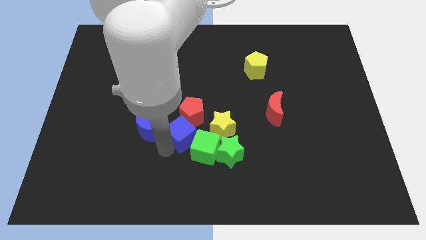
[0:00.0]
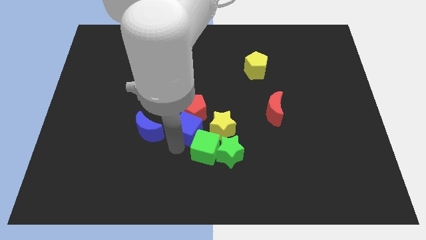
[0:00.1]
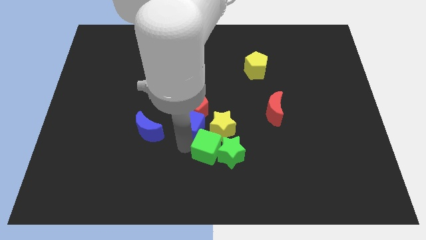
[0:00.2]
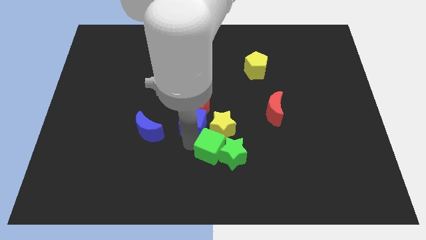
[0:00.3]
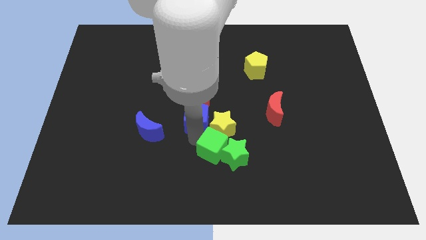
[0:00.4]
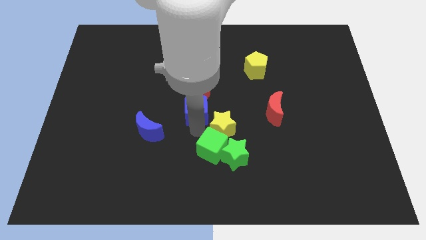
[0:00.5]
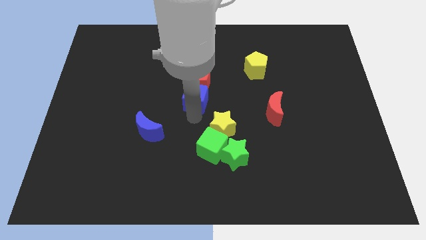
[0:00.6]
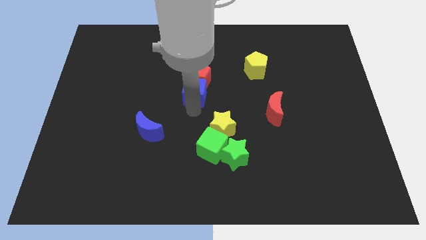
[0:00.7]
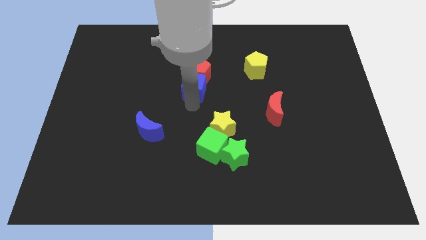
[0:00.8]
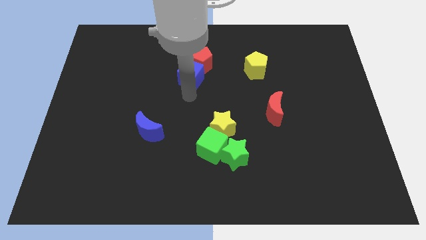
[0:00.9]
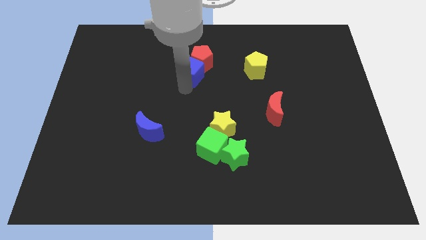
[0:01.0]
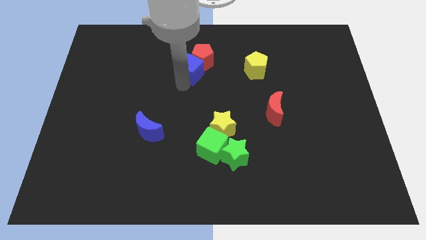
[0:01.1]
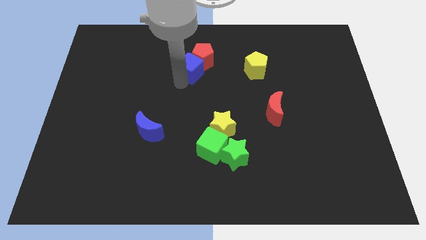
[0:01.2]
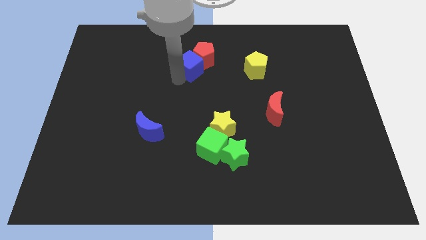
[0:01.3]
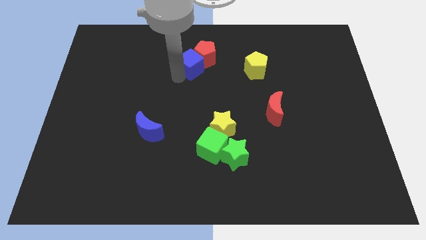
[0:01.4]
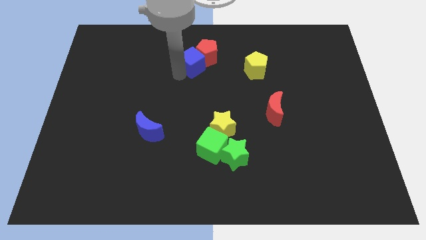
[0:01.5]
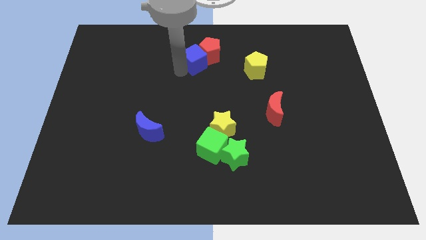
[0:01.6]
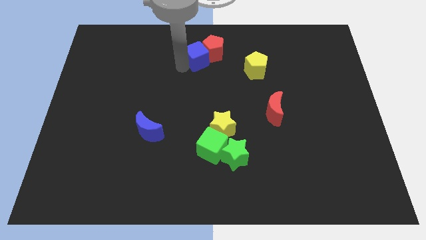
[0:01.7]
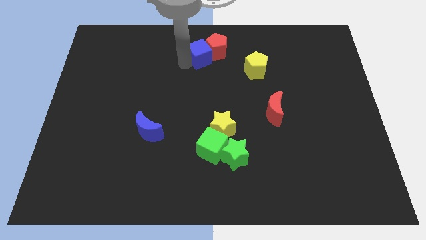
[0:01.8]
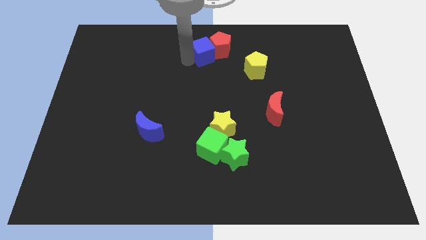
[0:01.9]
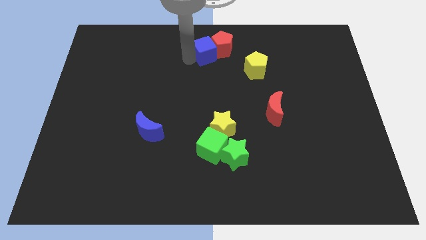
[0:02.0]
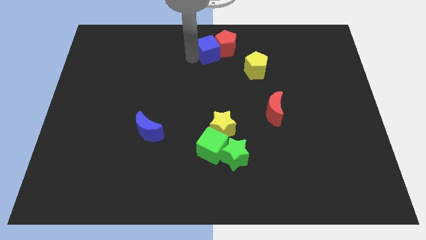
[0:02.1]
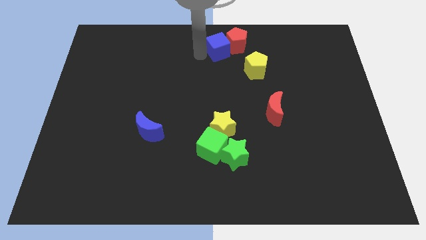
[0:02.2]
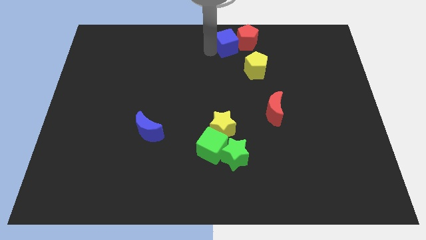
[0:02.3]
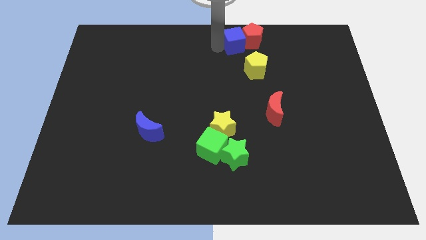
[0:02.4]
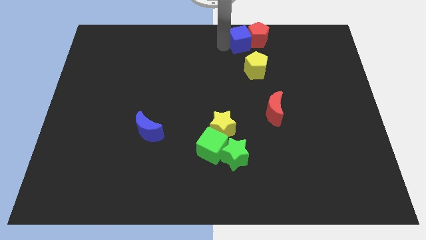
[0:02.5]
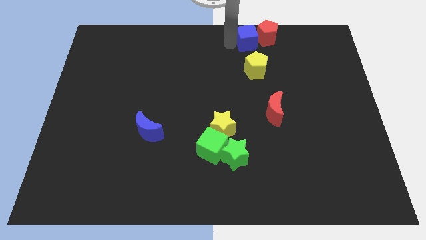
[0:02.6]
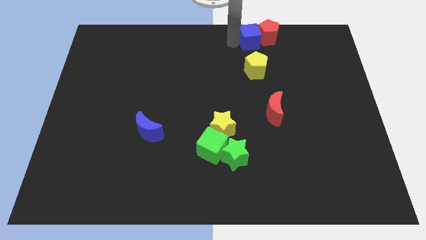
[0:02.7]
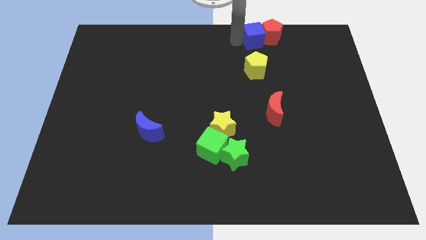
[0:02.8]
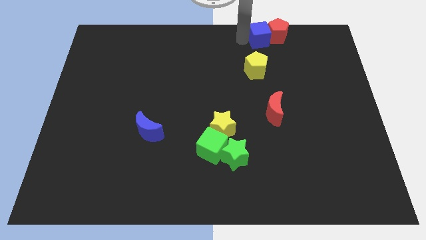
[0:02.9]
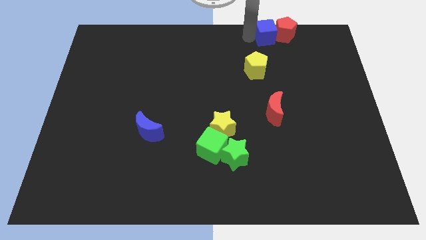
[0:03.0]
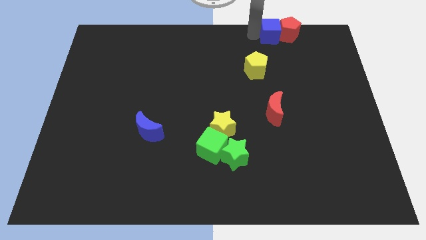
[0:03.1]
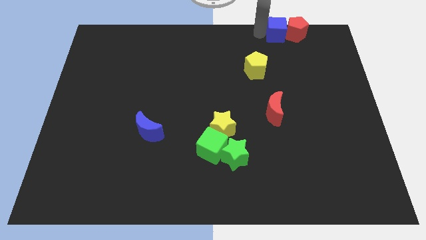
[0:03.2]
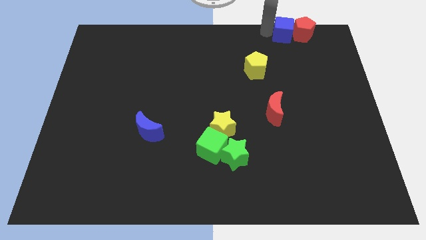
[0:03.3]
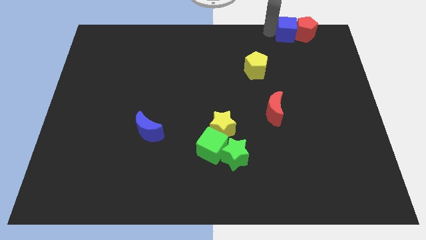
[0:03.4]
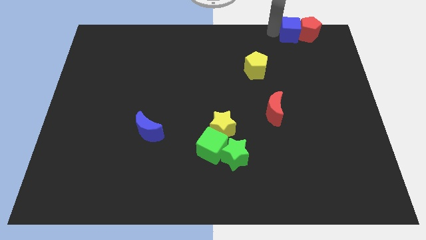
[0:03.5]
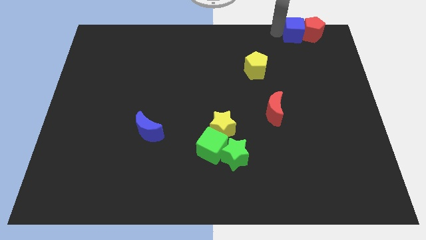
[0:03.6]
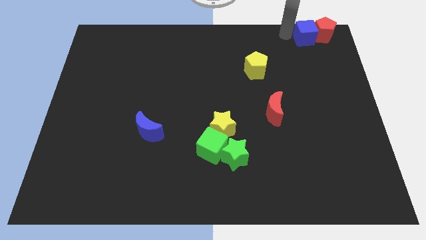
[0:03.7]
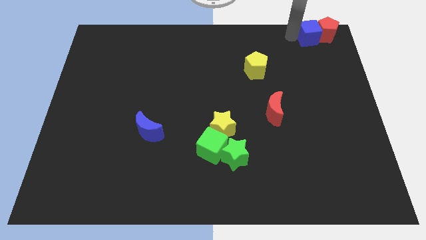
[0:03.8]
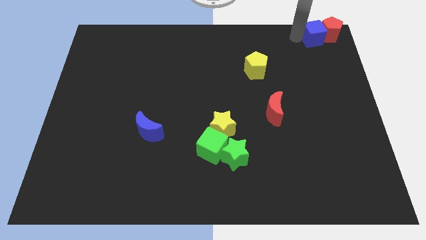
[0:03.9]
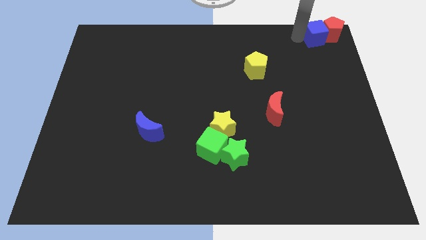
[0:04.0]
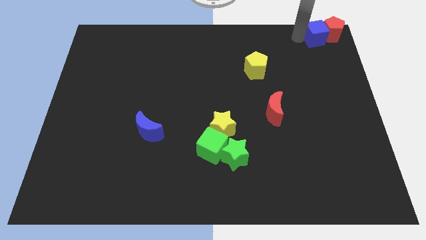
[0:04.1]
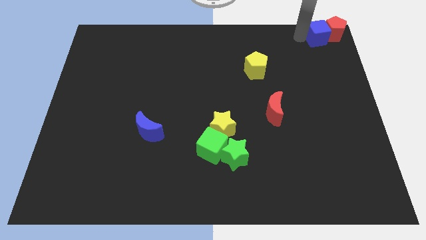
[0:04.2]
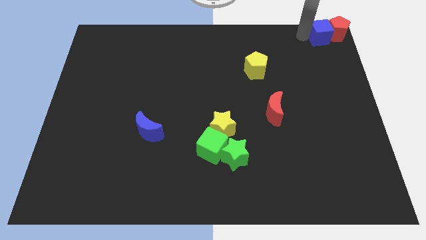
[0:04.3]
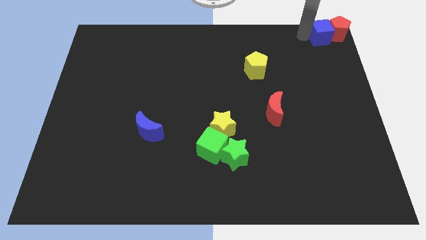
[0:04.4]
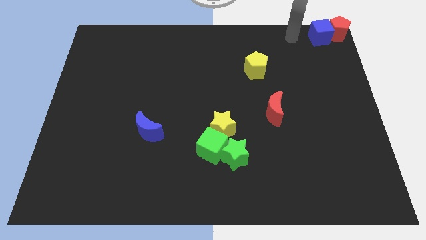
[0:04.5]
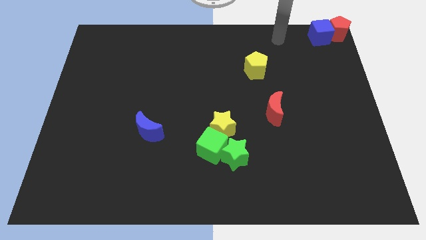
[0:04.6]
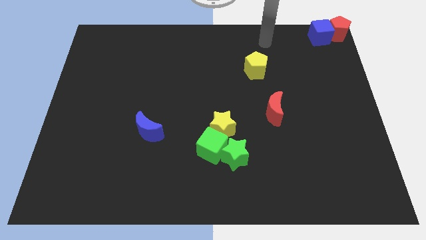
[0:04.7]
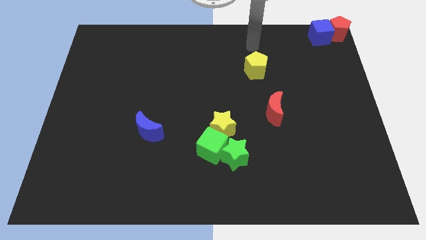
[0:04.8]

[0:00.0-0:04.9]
push the blue cube along with red pentagon to top right

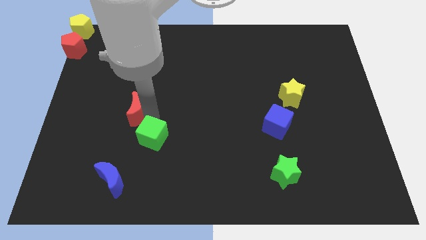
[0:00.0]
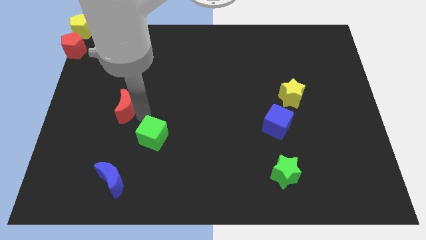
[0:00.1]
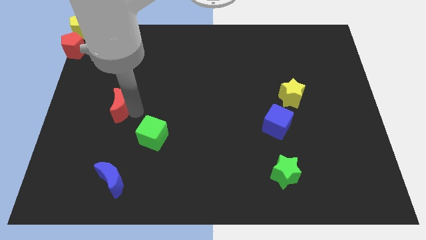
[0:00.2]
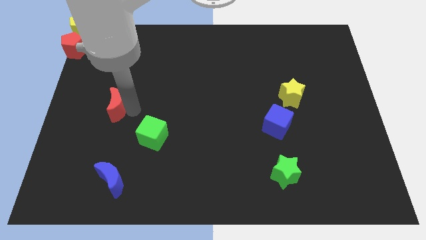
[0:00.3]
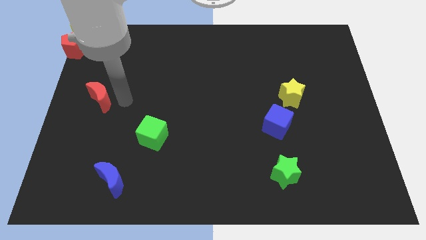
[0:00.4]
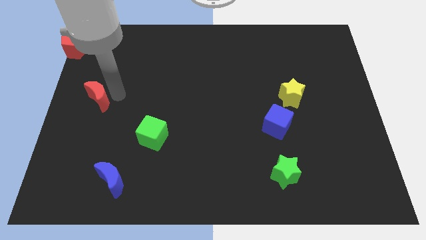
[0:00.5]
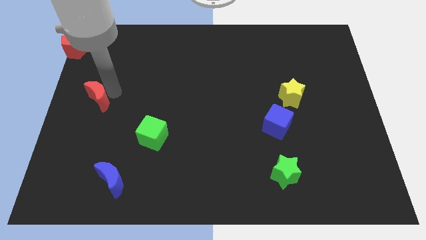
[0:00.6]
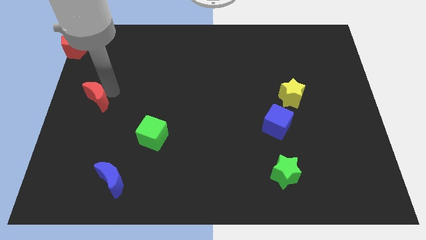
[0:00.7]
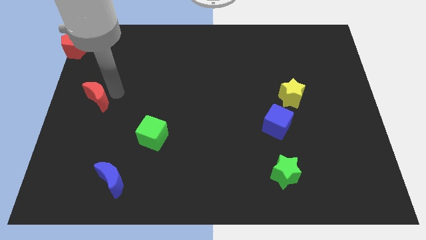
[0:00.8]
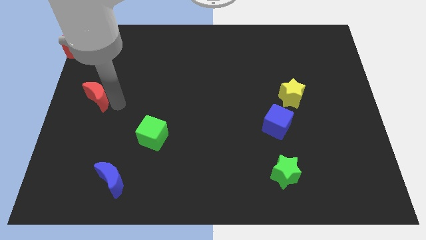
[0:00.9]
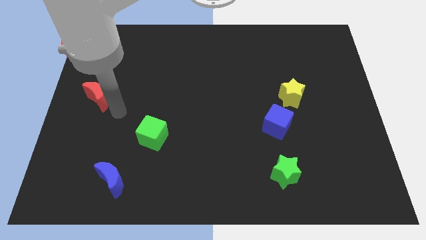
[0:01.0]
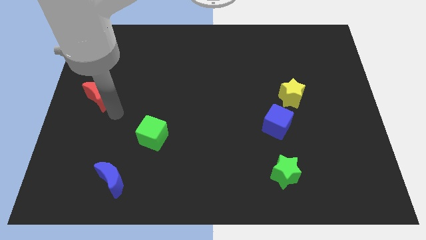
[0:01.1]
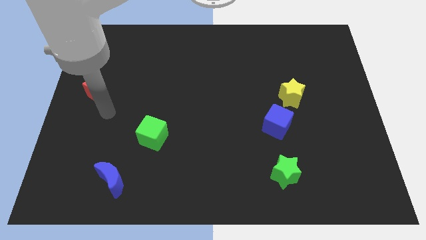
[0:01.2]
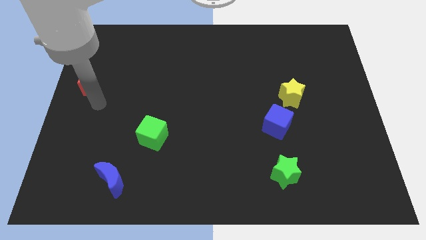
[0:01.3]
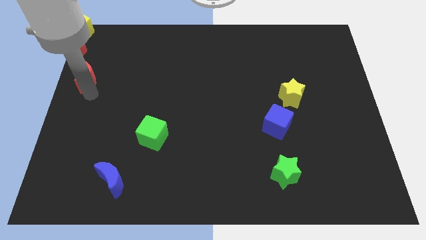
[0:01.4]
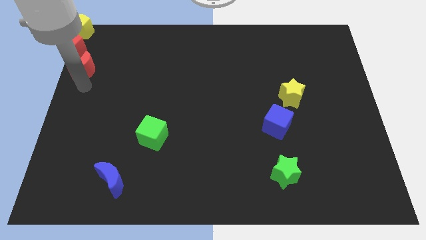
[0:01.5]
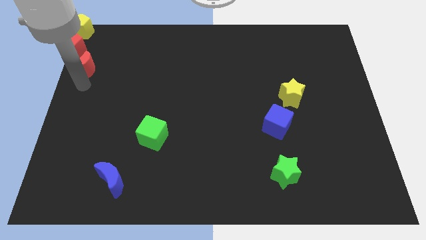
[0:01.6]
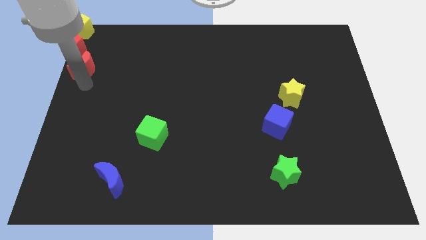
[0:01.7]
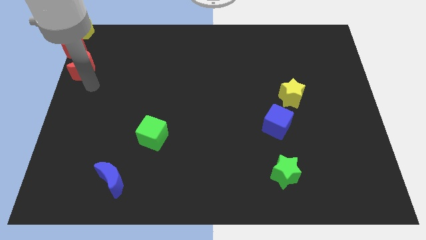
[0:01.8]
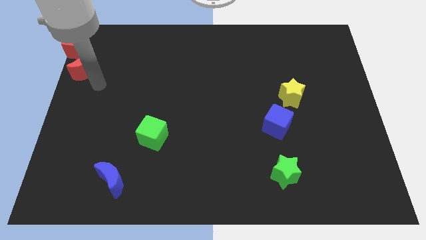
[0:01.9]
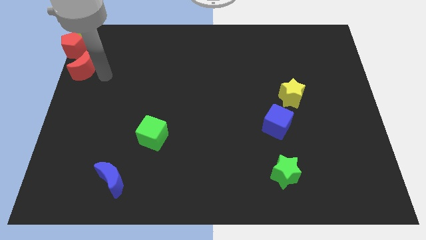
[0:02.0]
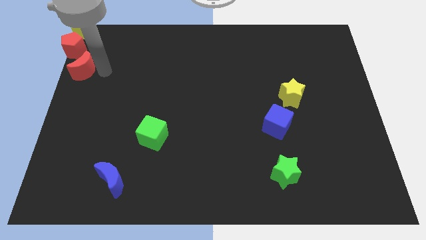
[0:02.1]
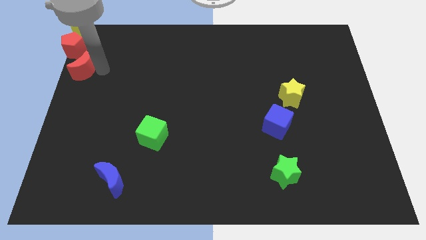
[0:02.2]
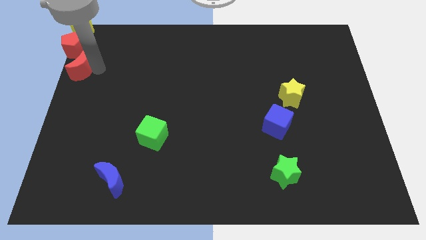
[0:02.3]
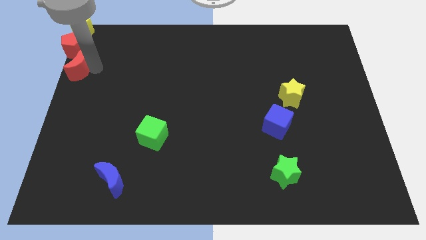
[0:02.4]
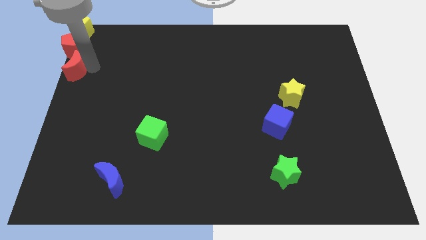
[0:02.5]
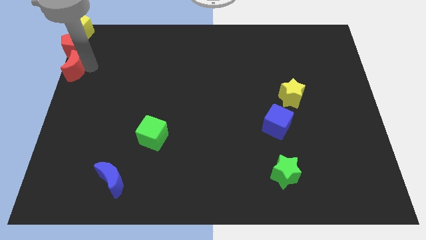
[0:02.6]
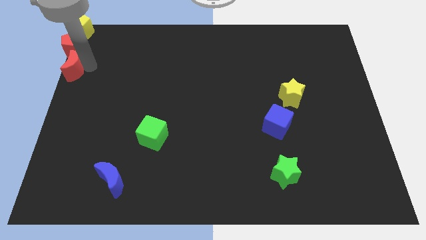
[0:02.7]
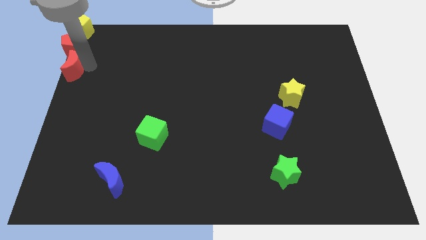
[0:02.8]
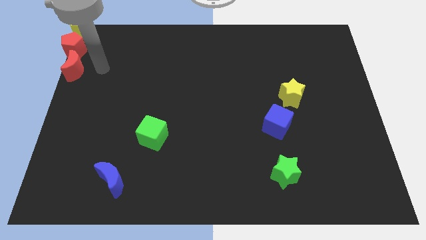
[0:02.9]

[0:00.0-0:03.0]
move the red crescent below the red pentagon

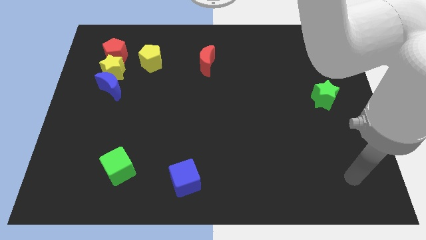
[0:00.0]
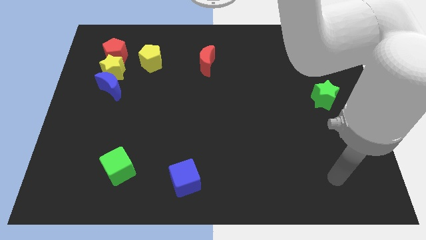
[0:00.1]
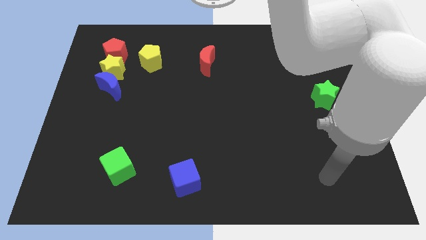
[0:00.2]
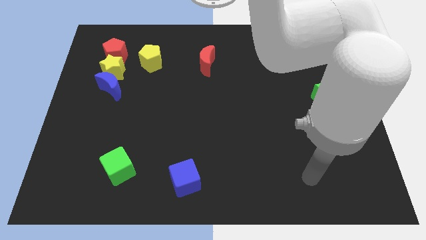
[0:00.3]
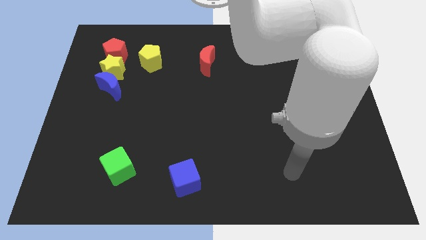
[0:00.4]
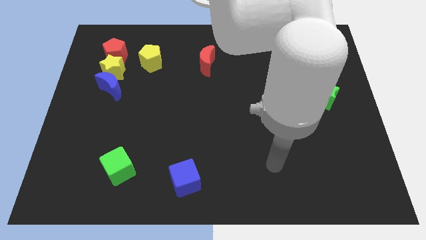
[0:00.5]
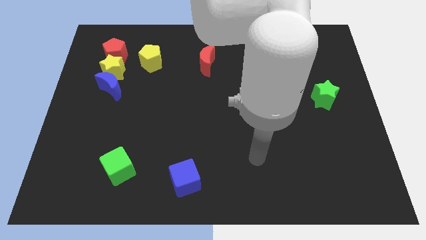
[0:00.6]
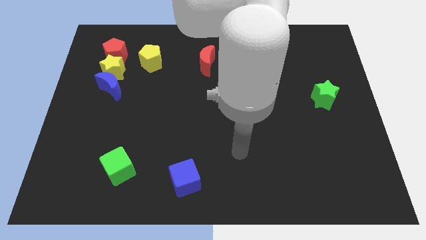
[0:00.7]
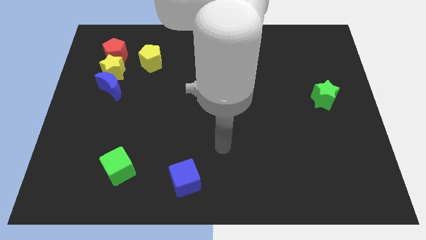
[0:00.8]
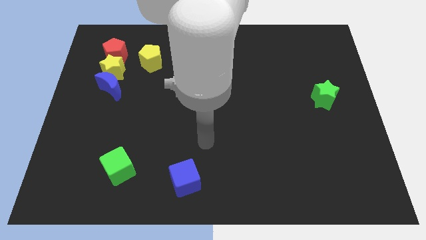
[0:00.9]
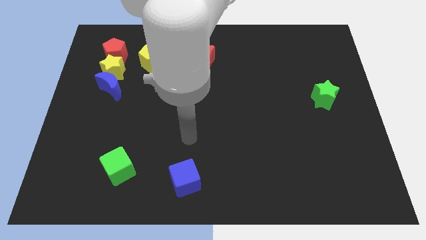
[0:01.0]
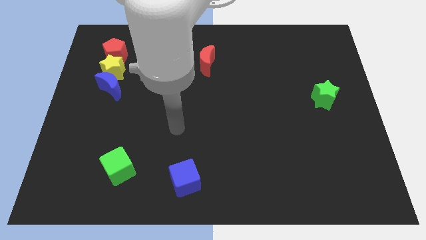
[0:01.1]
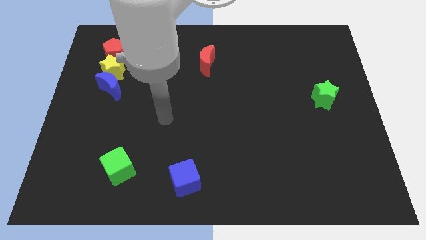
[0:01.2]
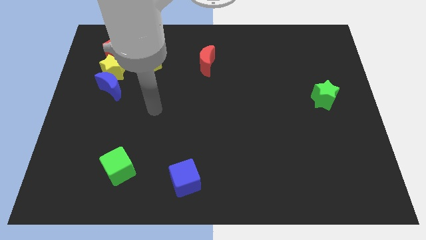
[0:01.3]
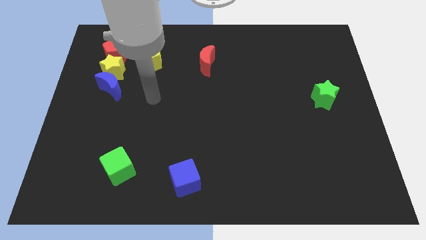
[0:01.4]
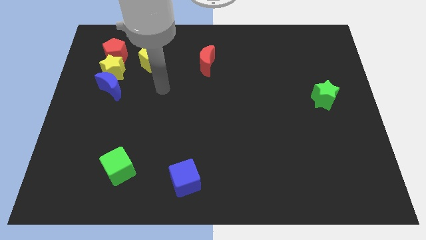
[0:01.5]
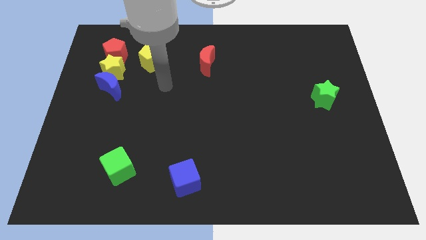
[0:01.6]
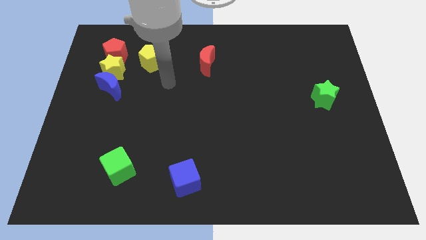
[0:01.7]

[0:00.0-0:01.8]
move your arm diagonal to the right of the blue crescent
